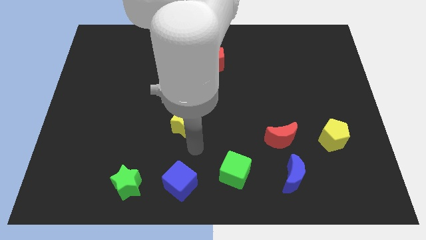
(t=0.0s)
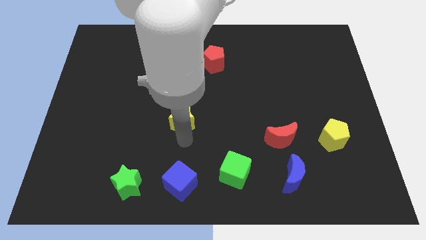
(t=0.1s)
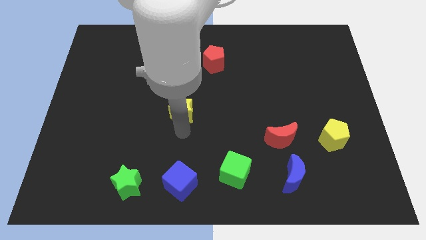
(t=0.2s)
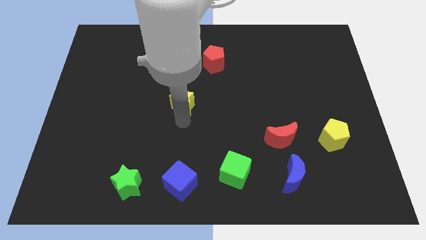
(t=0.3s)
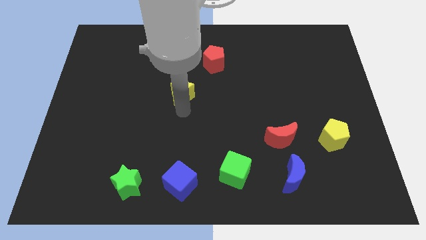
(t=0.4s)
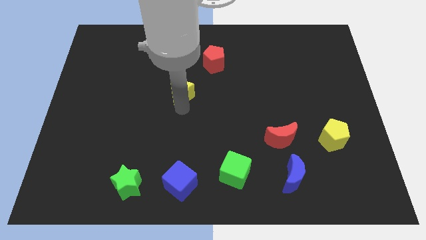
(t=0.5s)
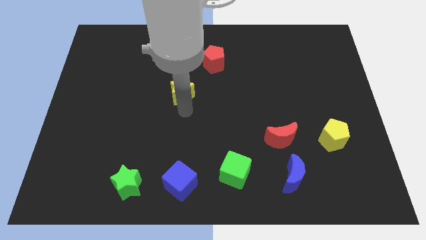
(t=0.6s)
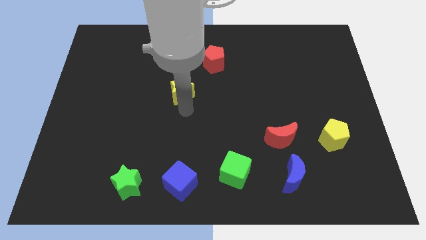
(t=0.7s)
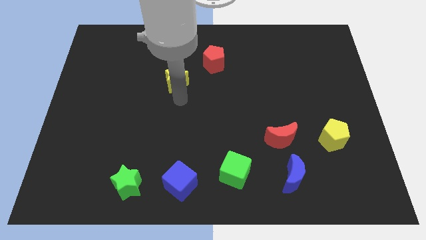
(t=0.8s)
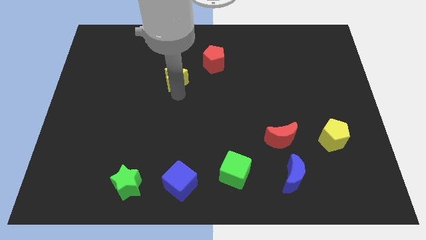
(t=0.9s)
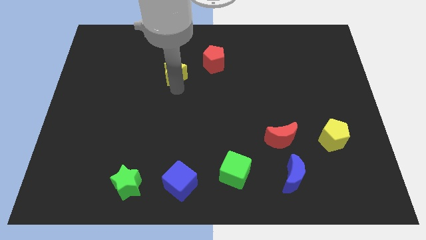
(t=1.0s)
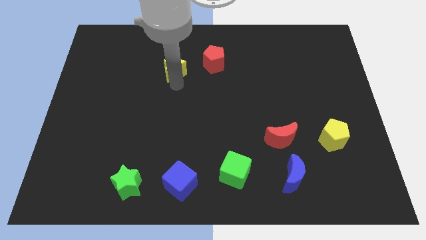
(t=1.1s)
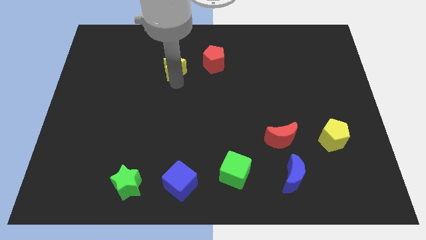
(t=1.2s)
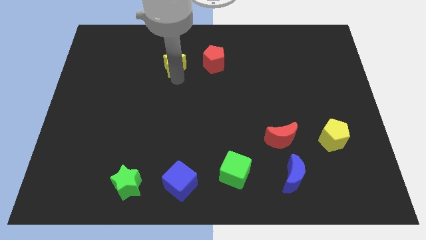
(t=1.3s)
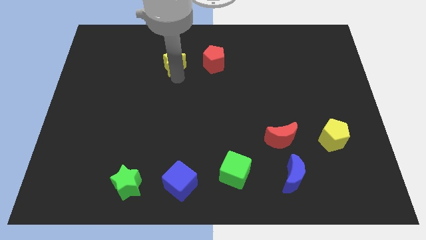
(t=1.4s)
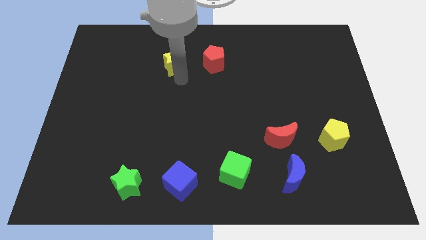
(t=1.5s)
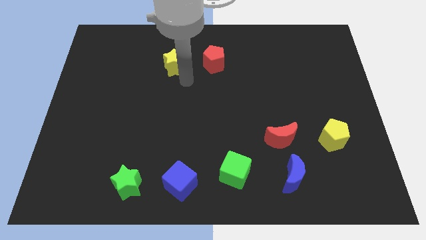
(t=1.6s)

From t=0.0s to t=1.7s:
move the yellow star towards the left side of the red pentagon

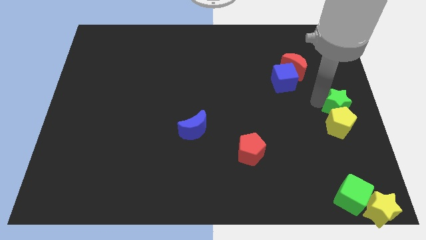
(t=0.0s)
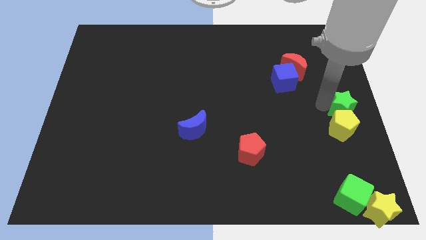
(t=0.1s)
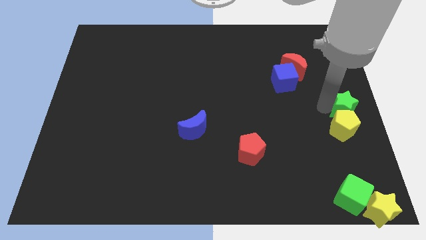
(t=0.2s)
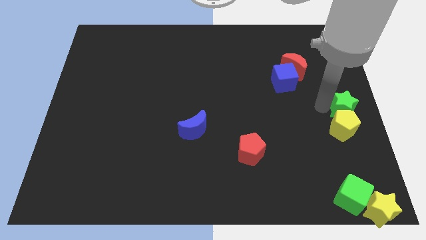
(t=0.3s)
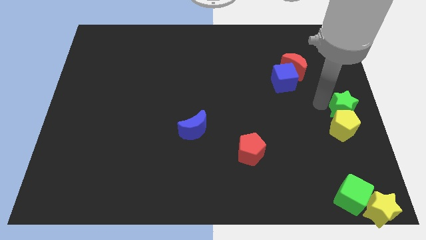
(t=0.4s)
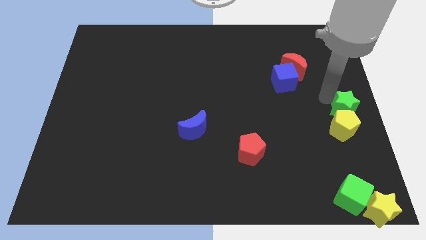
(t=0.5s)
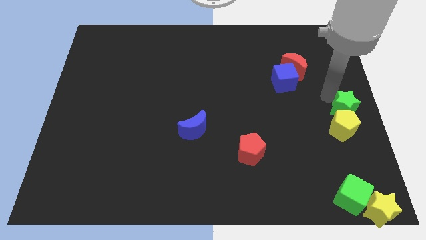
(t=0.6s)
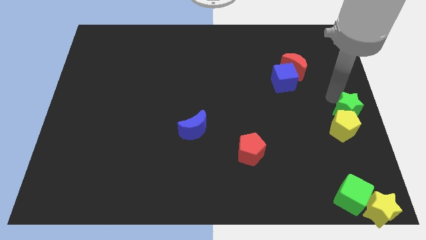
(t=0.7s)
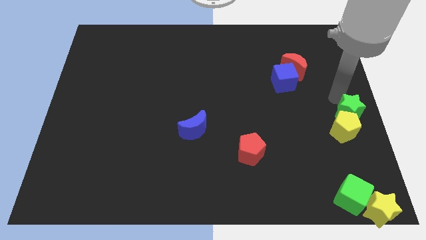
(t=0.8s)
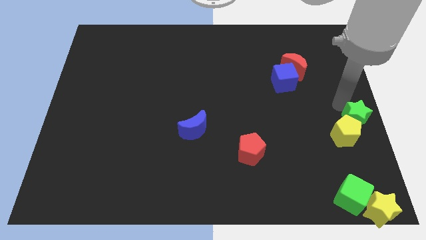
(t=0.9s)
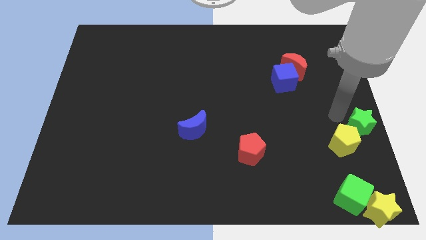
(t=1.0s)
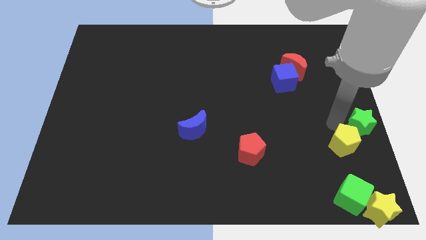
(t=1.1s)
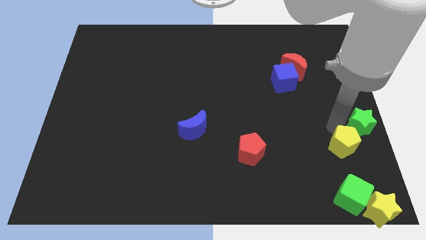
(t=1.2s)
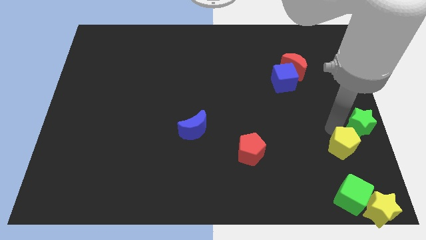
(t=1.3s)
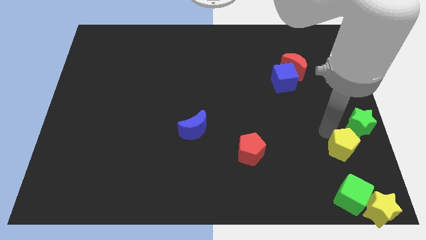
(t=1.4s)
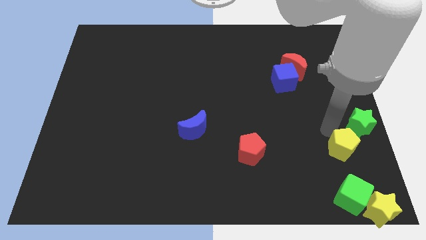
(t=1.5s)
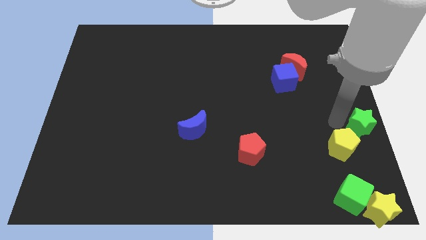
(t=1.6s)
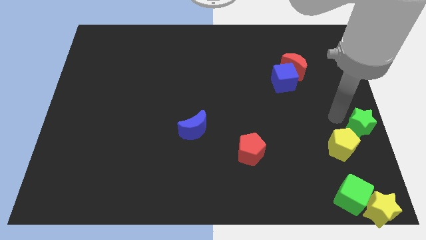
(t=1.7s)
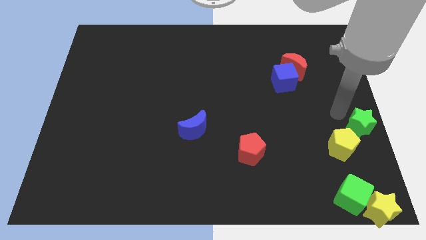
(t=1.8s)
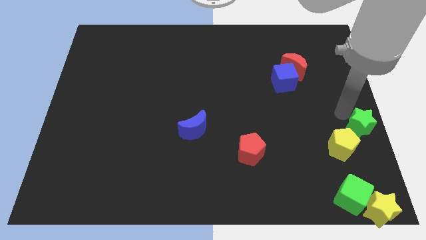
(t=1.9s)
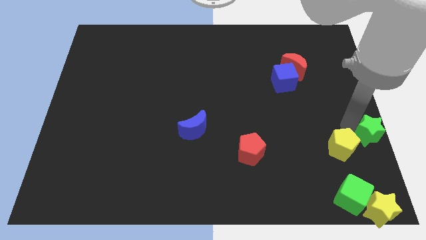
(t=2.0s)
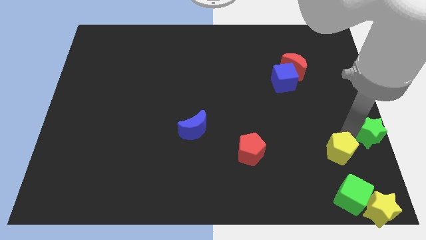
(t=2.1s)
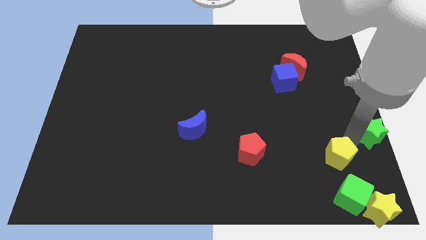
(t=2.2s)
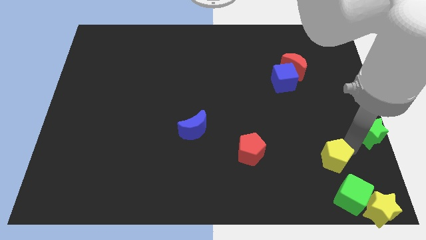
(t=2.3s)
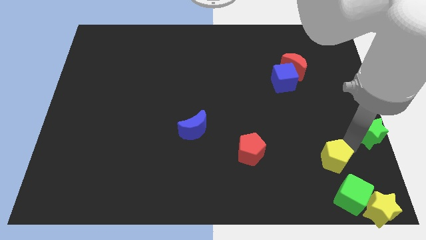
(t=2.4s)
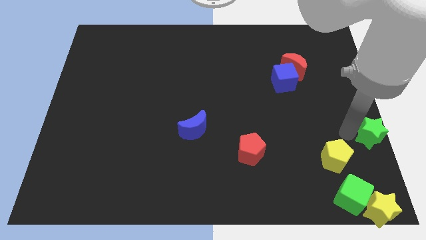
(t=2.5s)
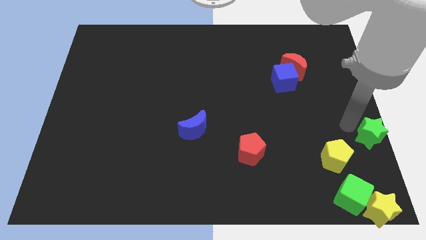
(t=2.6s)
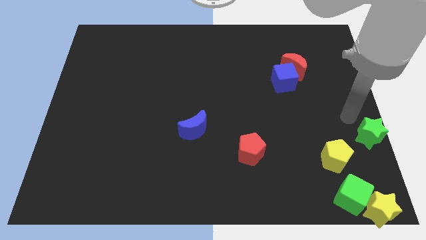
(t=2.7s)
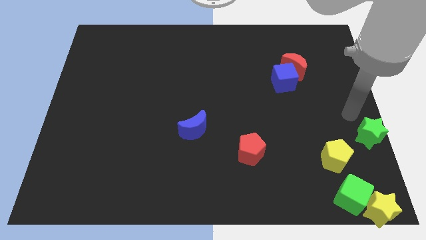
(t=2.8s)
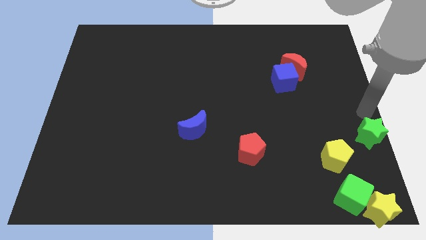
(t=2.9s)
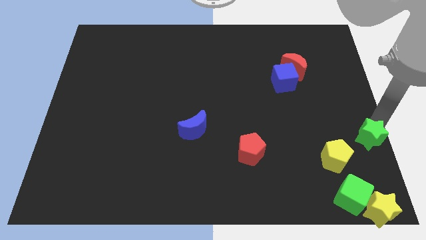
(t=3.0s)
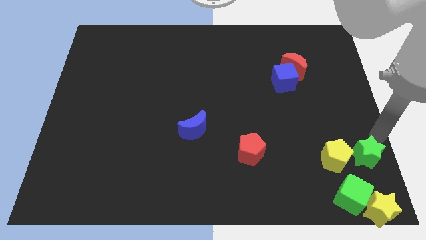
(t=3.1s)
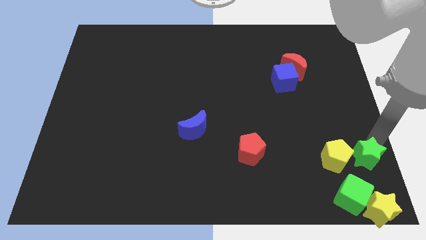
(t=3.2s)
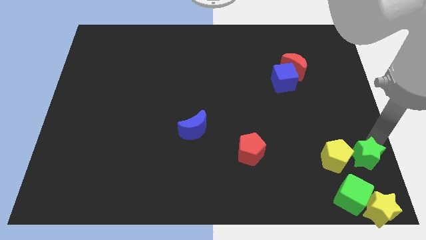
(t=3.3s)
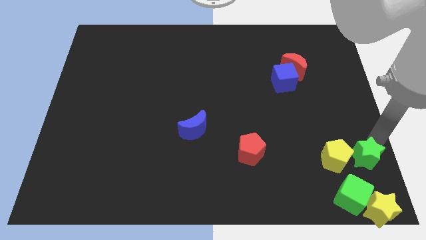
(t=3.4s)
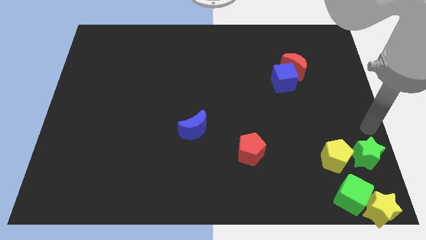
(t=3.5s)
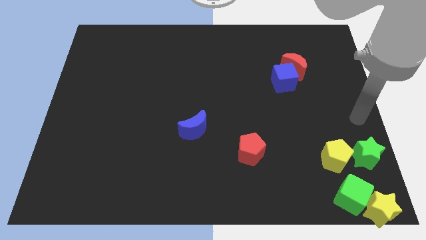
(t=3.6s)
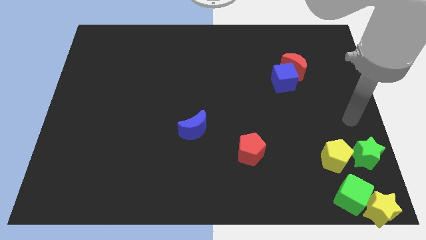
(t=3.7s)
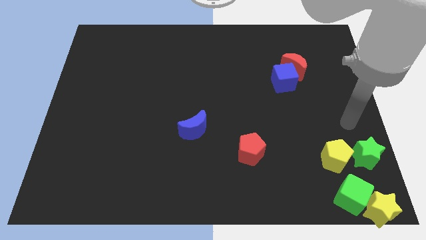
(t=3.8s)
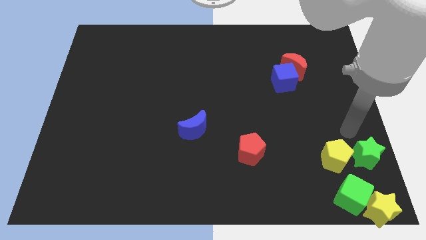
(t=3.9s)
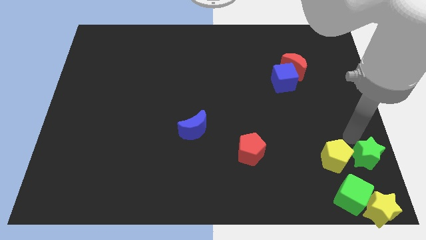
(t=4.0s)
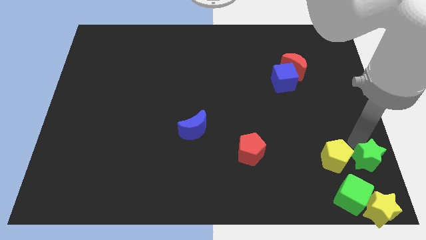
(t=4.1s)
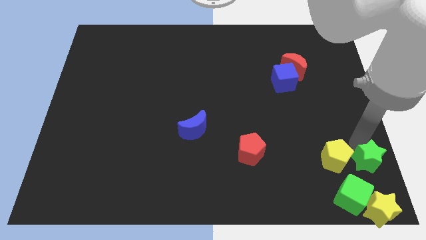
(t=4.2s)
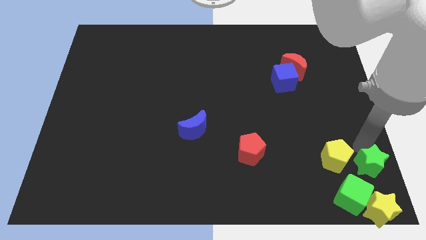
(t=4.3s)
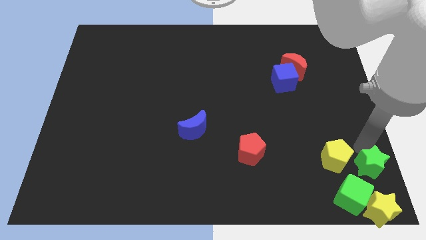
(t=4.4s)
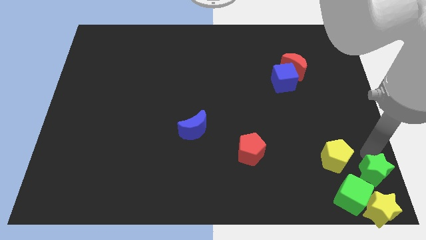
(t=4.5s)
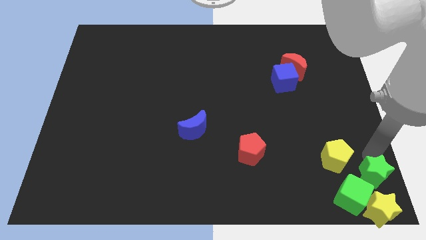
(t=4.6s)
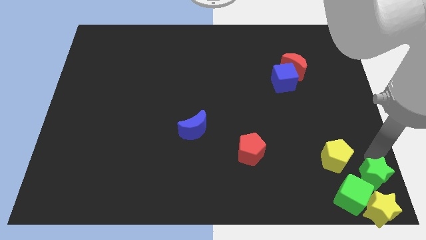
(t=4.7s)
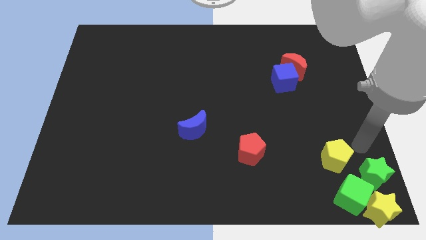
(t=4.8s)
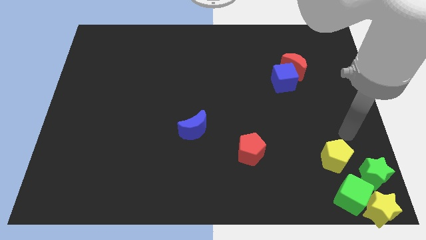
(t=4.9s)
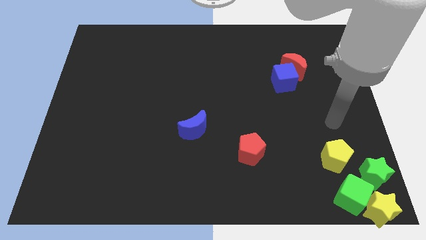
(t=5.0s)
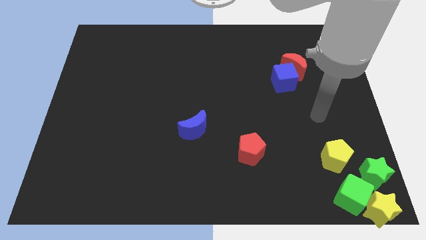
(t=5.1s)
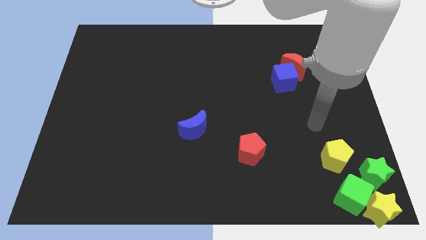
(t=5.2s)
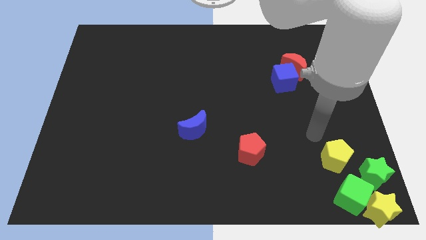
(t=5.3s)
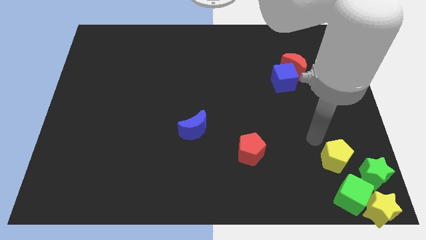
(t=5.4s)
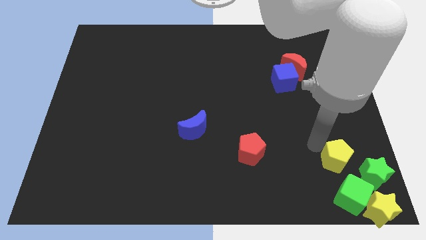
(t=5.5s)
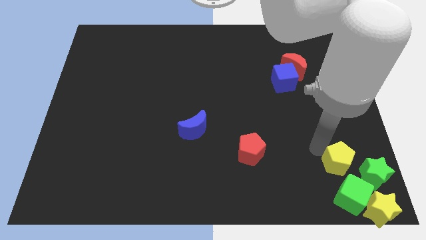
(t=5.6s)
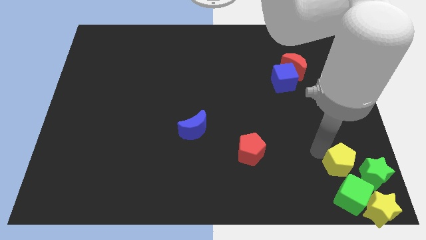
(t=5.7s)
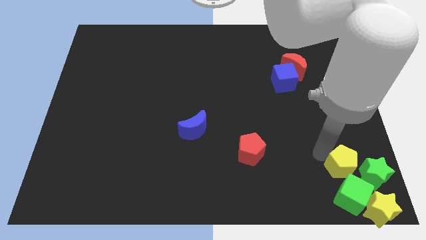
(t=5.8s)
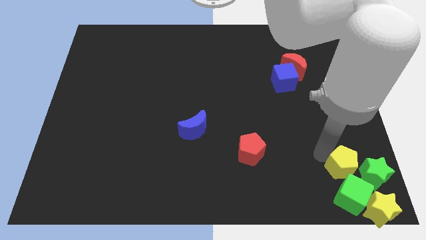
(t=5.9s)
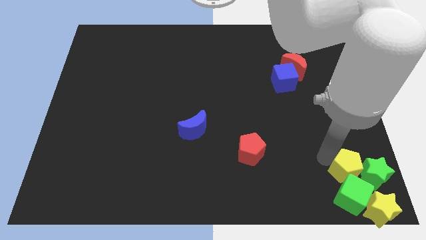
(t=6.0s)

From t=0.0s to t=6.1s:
push the green star and the yellow pentagon into the group of blocks

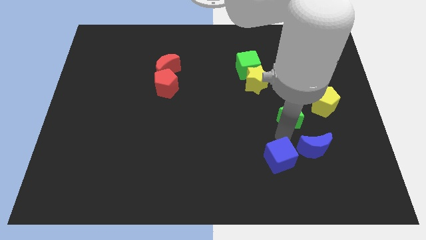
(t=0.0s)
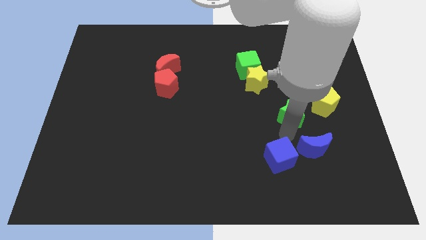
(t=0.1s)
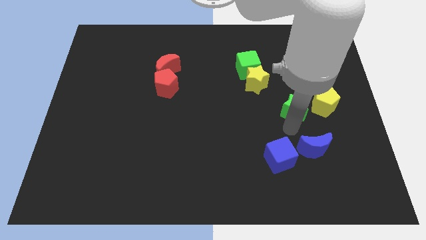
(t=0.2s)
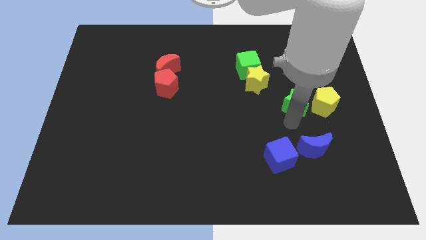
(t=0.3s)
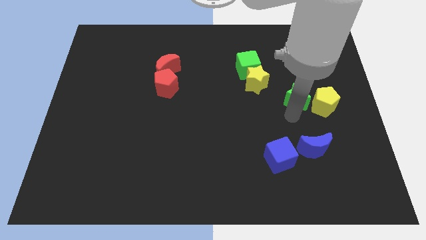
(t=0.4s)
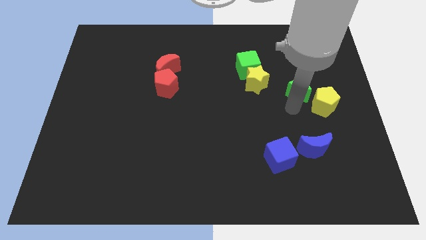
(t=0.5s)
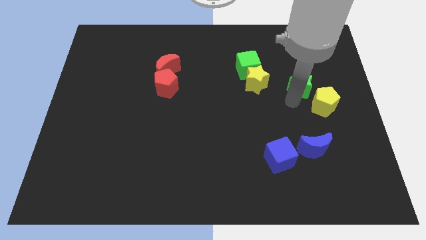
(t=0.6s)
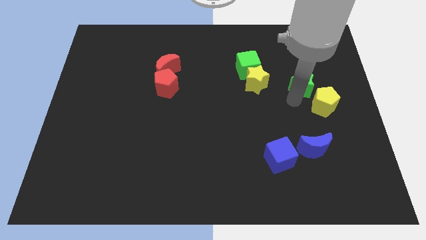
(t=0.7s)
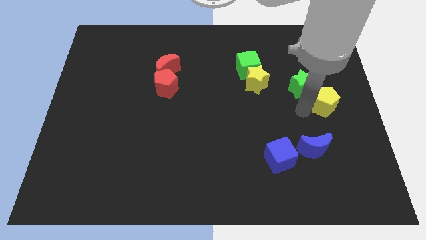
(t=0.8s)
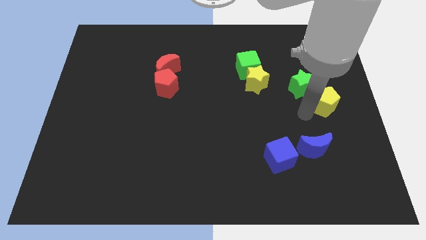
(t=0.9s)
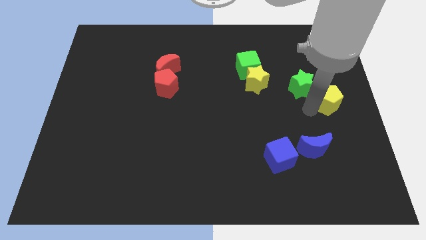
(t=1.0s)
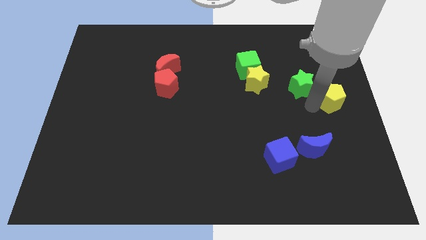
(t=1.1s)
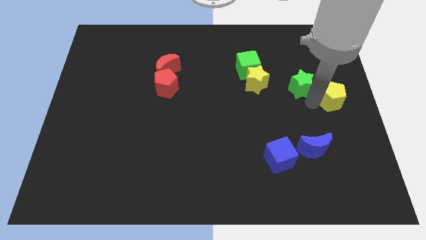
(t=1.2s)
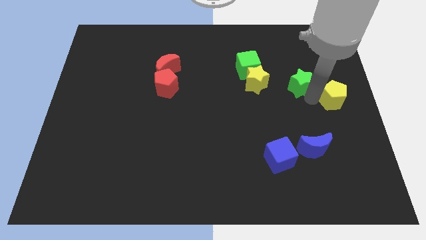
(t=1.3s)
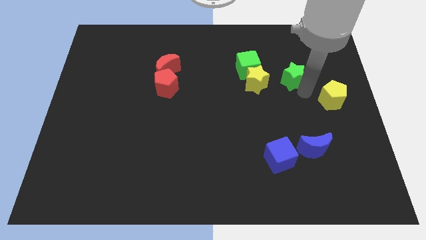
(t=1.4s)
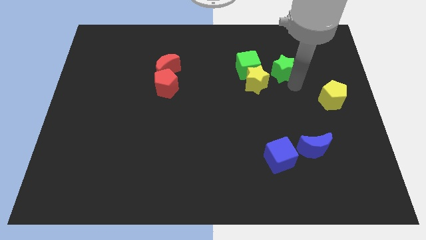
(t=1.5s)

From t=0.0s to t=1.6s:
move the green star towards the yellow pentagon
